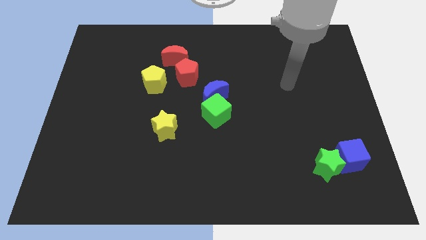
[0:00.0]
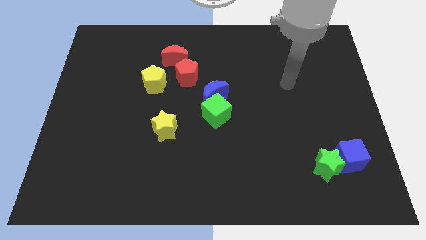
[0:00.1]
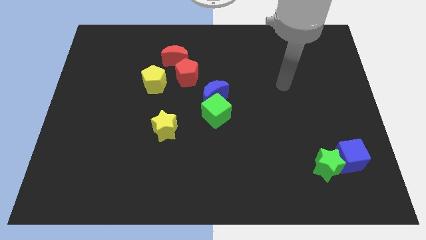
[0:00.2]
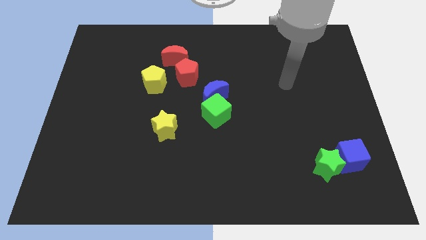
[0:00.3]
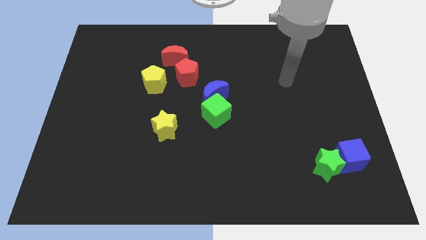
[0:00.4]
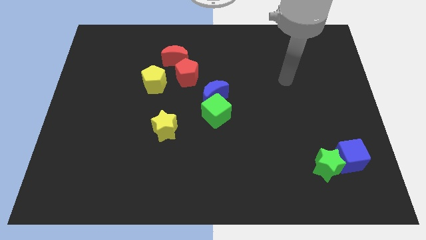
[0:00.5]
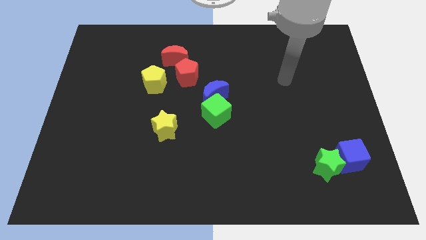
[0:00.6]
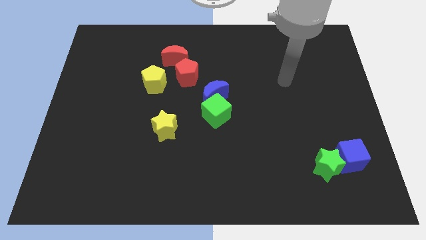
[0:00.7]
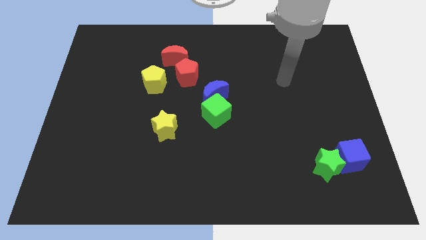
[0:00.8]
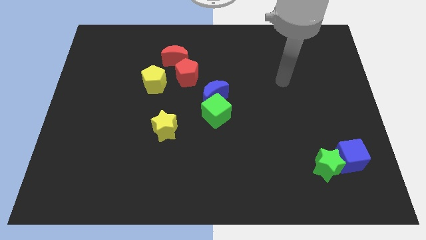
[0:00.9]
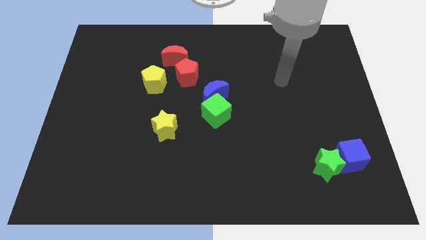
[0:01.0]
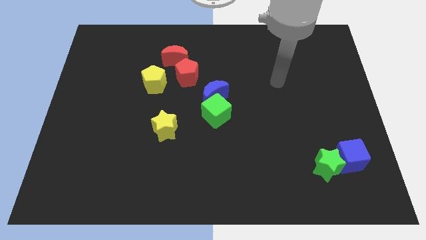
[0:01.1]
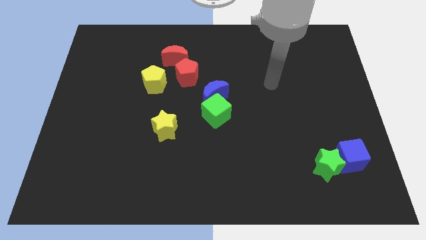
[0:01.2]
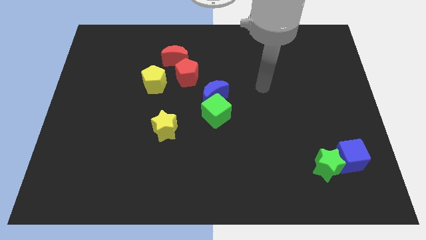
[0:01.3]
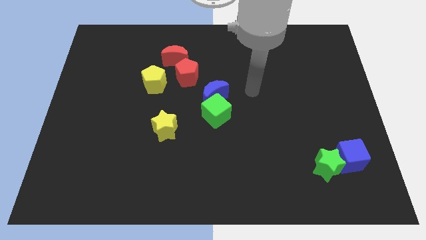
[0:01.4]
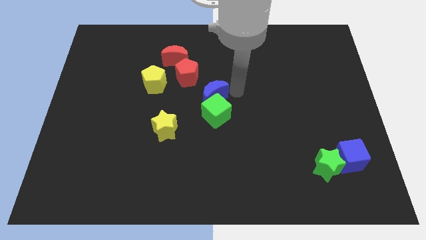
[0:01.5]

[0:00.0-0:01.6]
move your arm towards the blue crescent

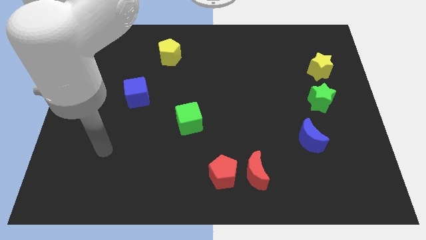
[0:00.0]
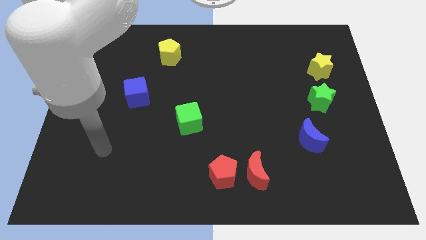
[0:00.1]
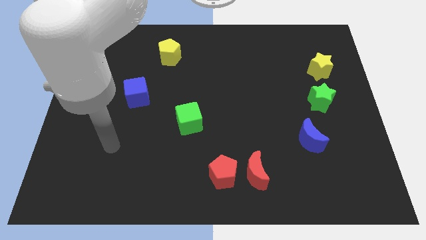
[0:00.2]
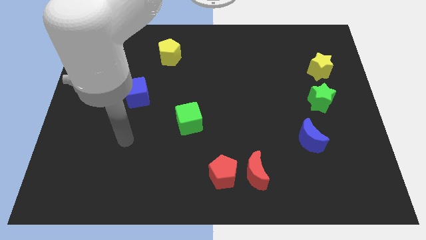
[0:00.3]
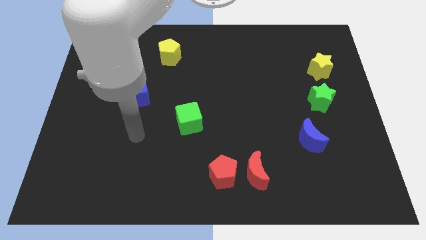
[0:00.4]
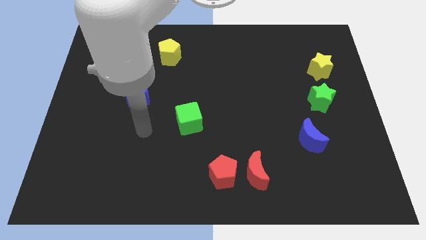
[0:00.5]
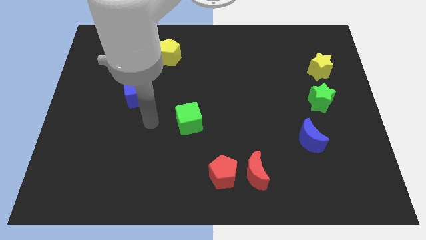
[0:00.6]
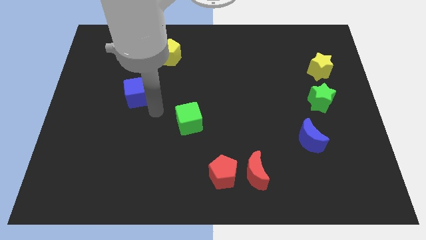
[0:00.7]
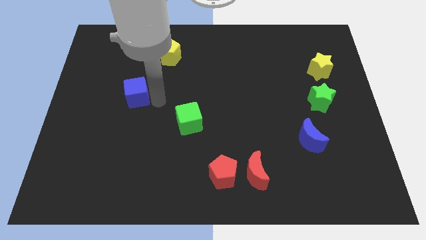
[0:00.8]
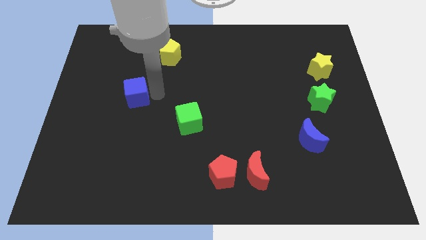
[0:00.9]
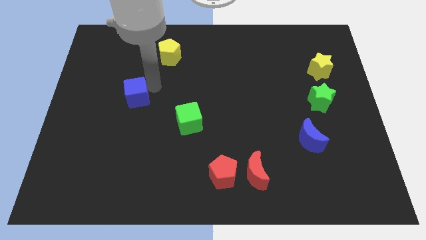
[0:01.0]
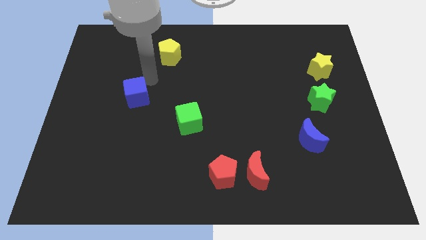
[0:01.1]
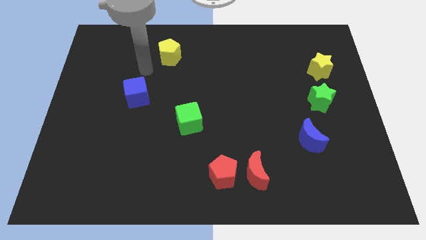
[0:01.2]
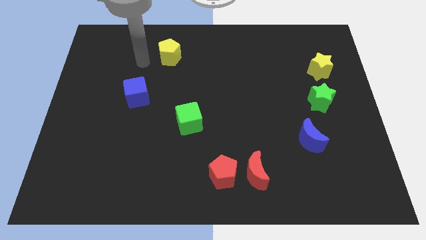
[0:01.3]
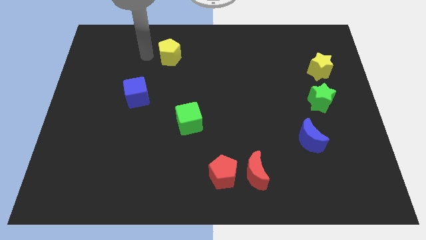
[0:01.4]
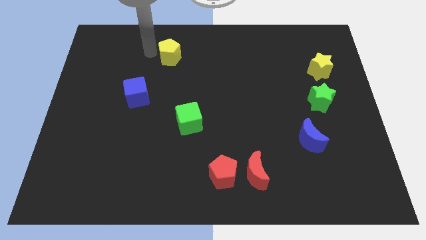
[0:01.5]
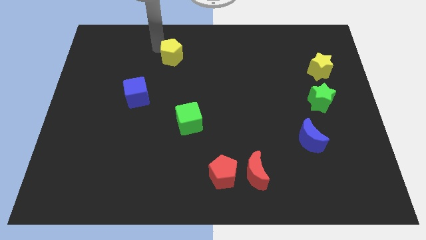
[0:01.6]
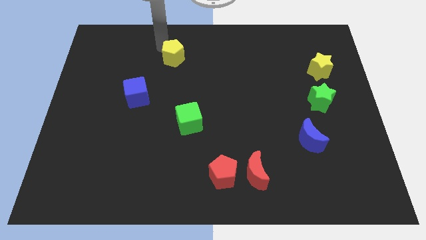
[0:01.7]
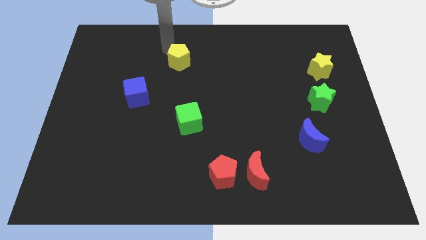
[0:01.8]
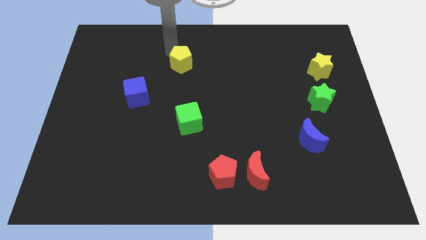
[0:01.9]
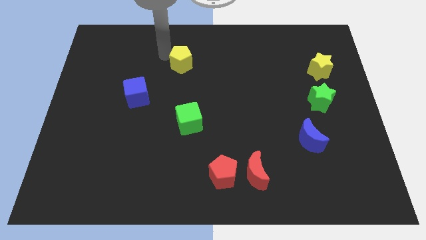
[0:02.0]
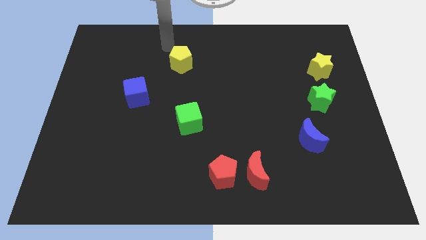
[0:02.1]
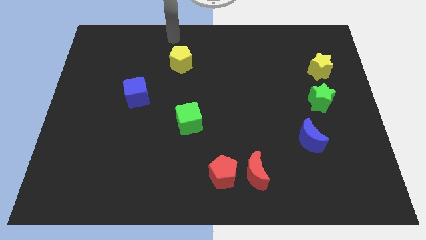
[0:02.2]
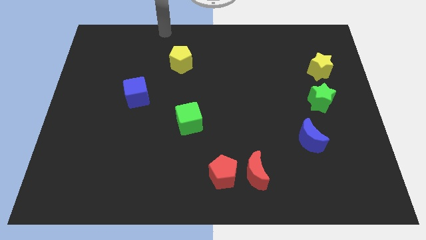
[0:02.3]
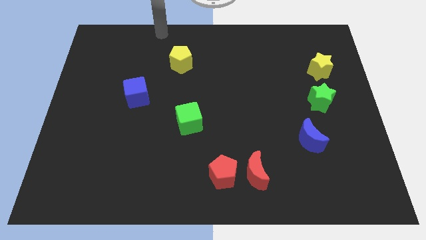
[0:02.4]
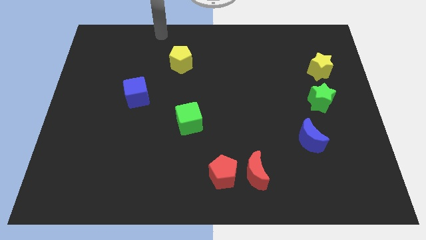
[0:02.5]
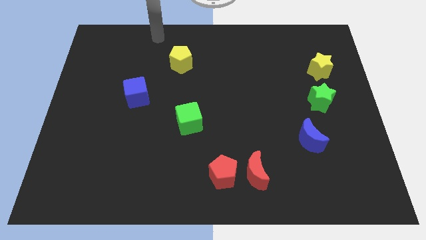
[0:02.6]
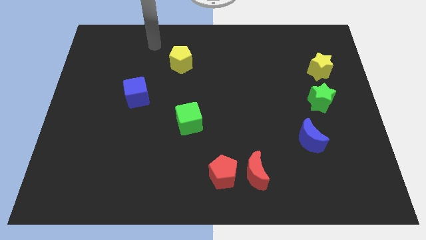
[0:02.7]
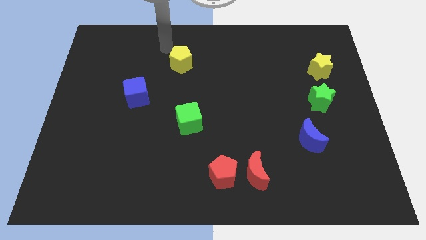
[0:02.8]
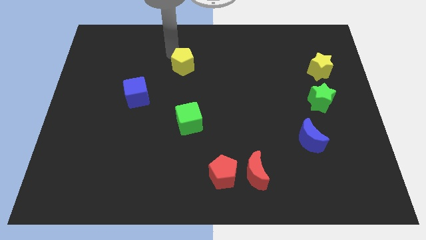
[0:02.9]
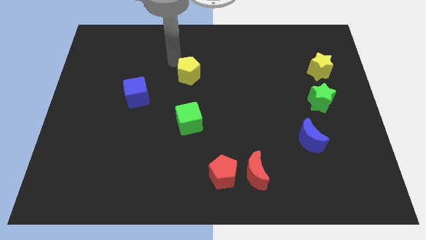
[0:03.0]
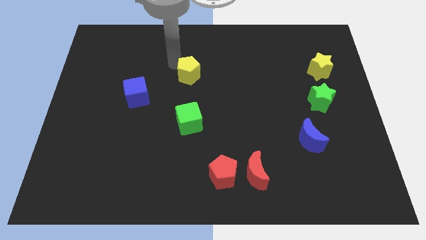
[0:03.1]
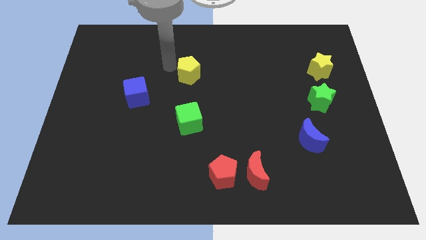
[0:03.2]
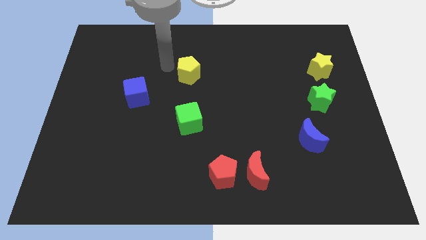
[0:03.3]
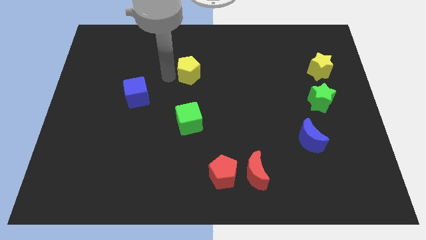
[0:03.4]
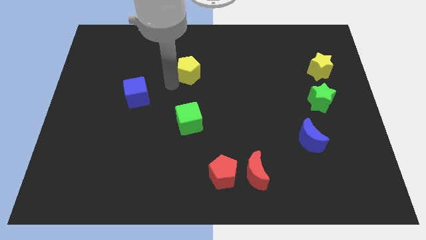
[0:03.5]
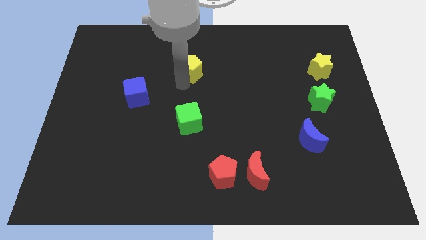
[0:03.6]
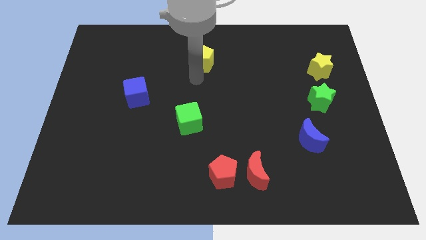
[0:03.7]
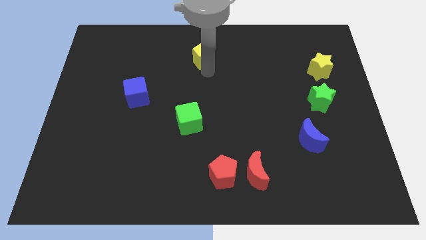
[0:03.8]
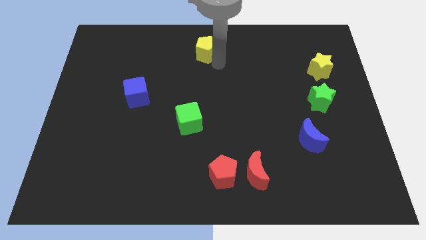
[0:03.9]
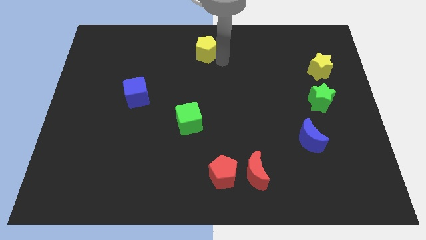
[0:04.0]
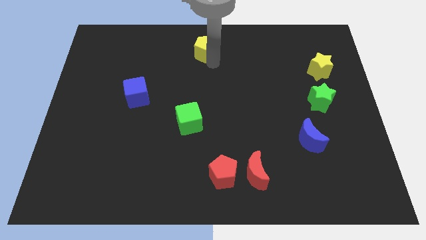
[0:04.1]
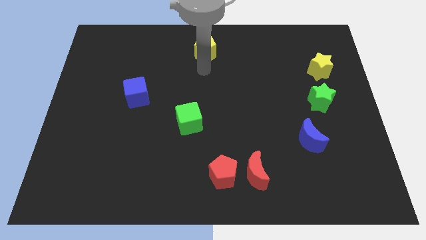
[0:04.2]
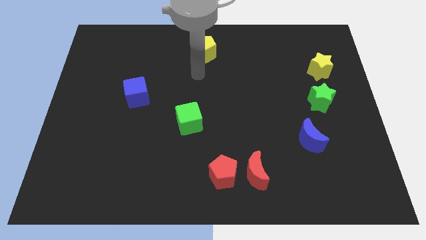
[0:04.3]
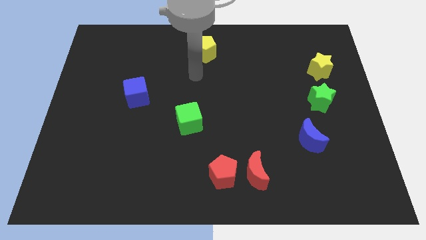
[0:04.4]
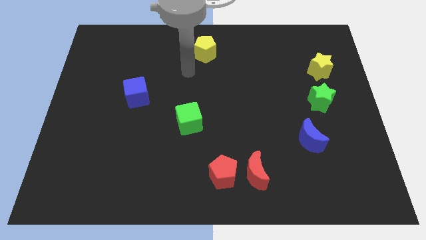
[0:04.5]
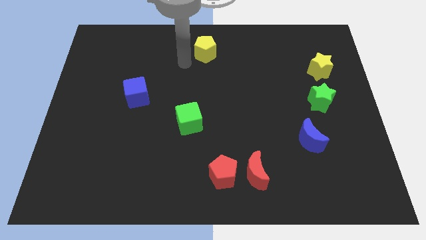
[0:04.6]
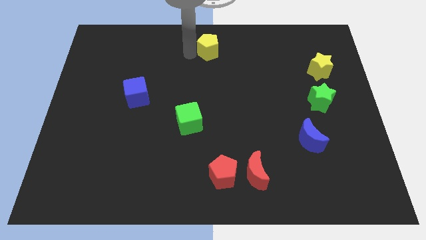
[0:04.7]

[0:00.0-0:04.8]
push the yellow pentagon to the top of the board

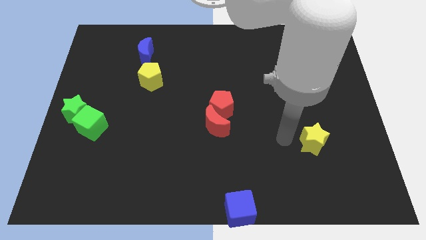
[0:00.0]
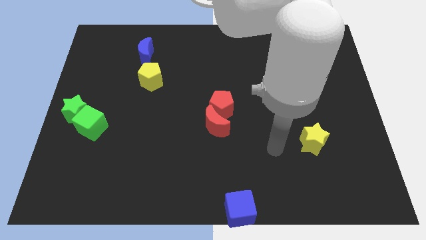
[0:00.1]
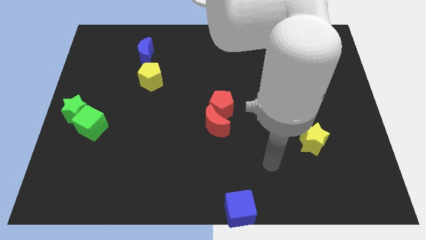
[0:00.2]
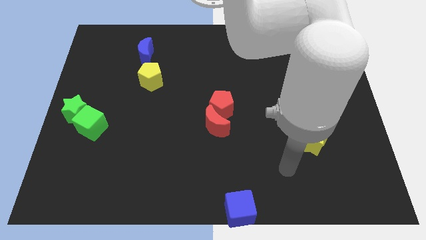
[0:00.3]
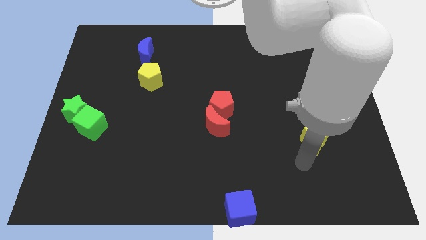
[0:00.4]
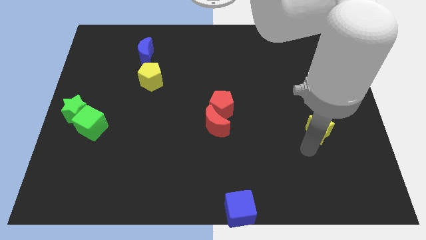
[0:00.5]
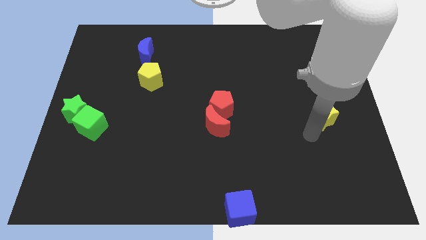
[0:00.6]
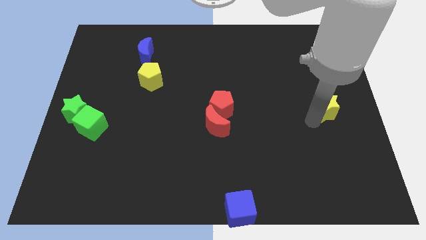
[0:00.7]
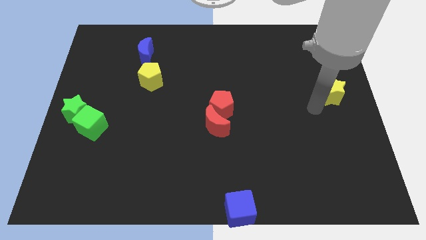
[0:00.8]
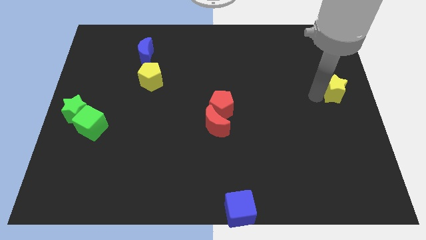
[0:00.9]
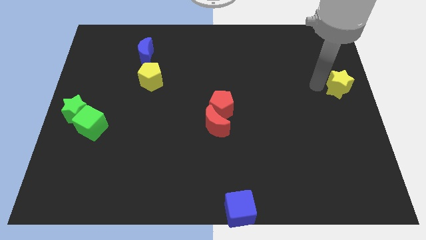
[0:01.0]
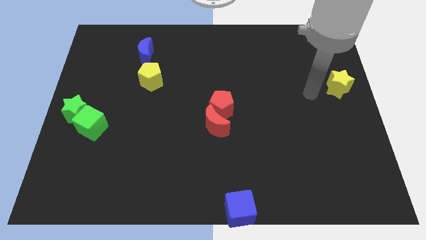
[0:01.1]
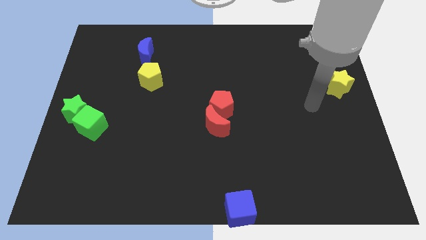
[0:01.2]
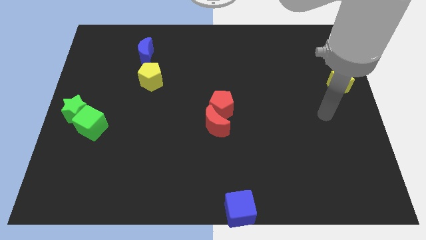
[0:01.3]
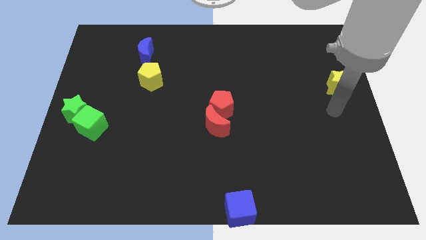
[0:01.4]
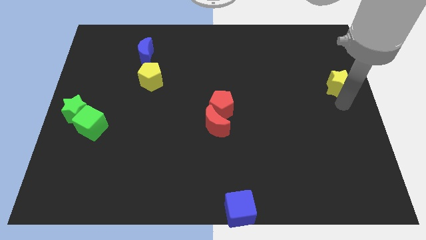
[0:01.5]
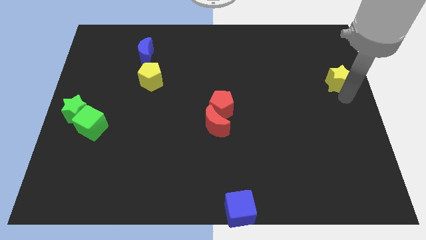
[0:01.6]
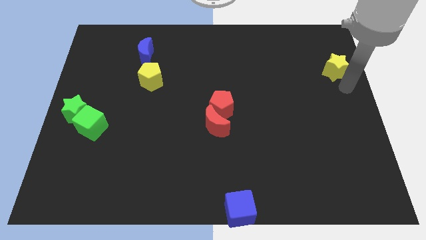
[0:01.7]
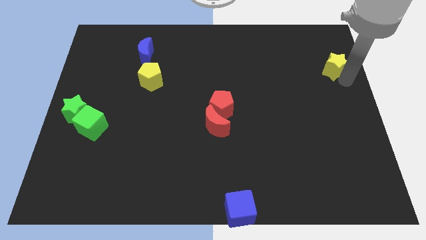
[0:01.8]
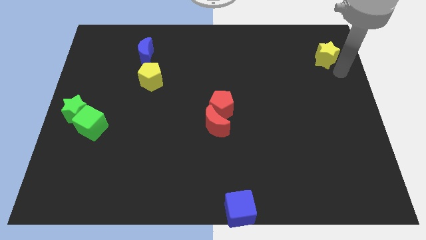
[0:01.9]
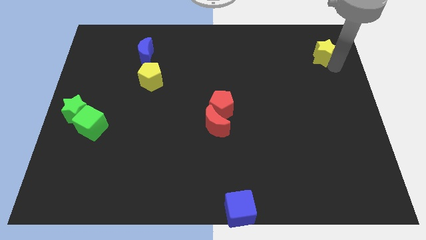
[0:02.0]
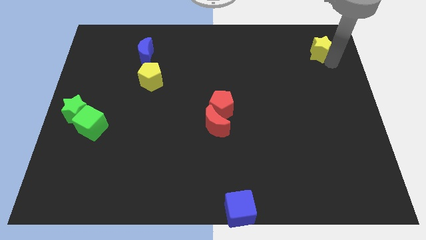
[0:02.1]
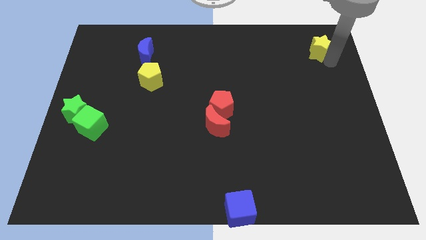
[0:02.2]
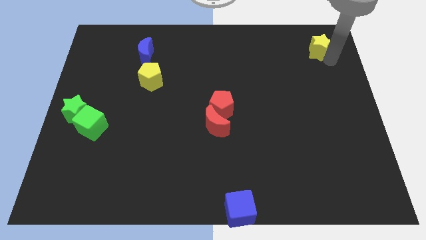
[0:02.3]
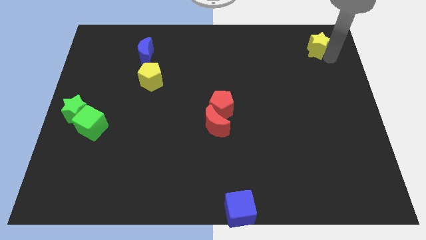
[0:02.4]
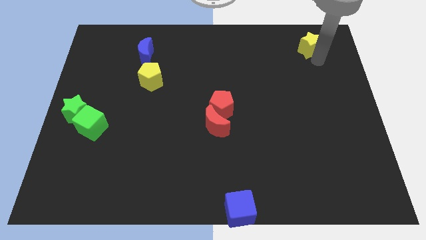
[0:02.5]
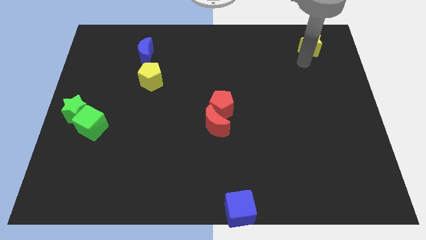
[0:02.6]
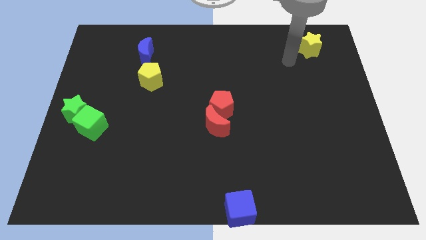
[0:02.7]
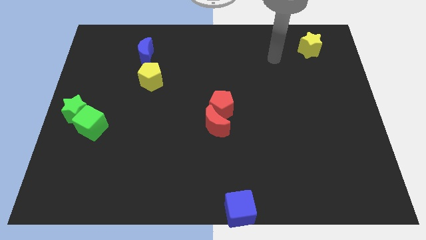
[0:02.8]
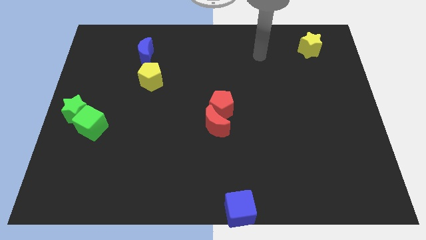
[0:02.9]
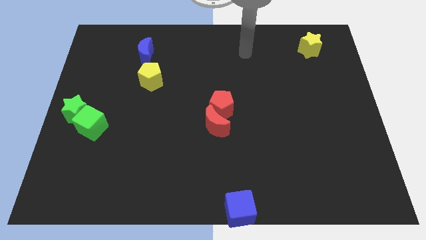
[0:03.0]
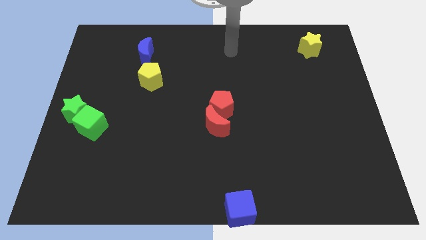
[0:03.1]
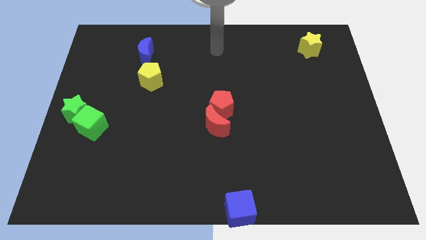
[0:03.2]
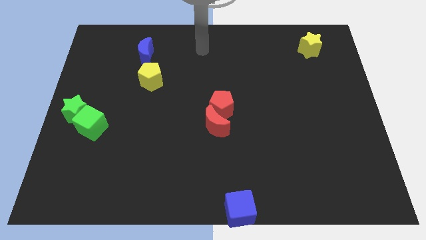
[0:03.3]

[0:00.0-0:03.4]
place the yellow star to the top right
